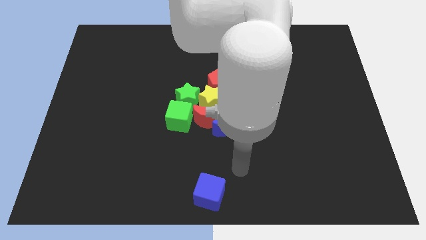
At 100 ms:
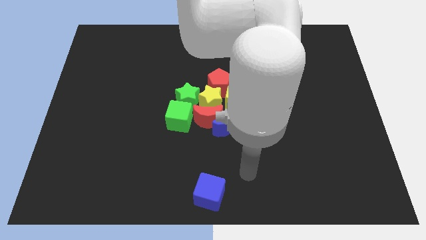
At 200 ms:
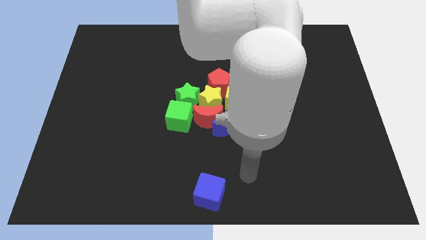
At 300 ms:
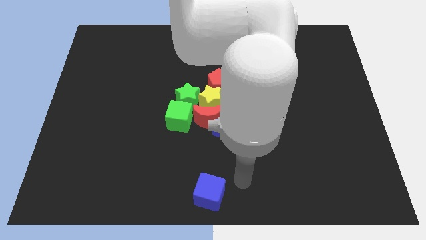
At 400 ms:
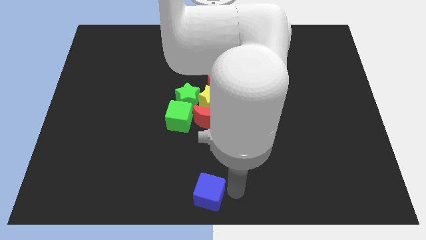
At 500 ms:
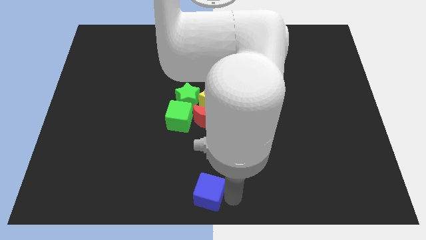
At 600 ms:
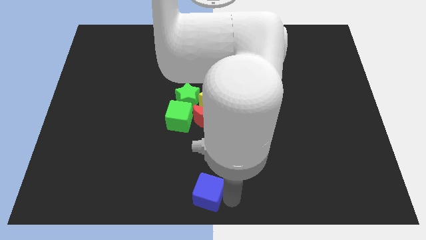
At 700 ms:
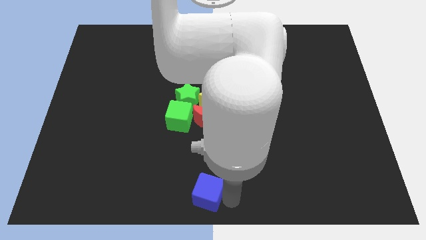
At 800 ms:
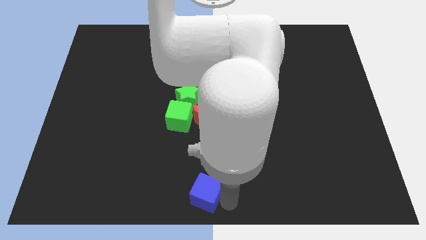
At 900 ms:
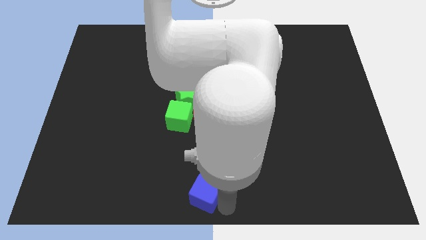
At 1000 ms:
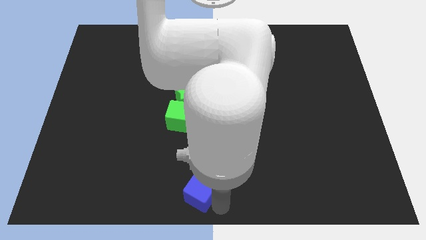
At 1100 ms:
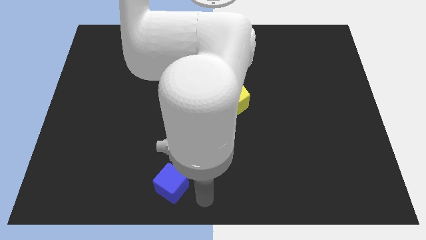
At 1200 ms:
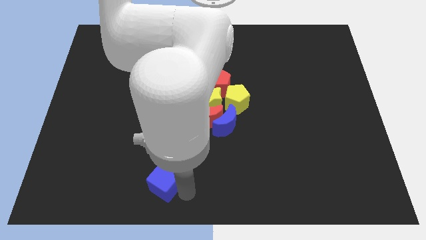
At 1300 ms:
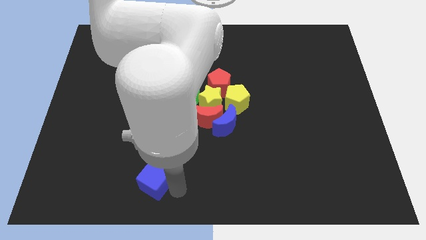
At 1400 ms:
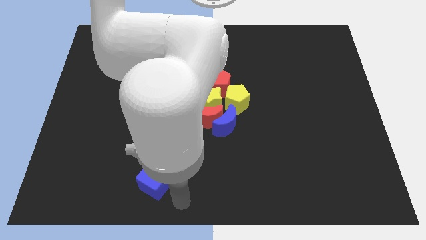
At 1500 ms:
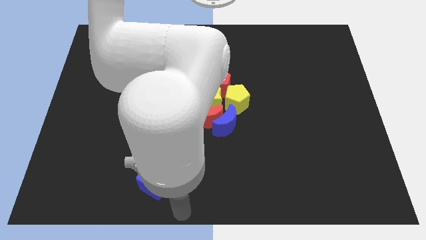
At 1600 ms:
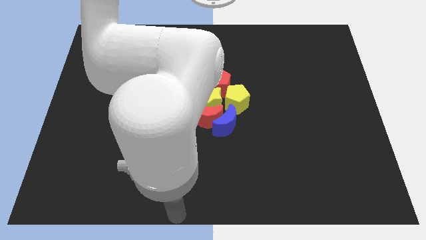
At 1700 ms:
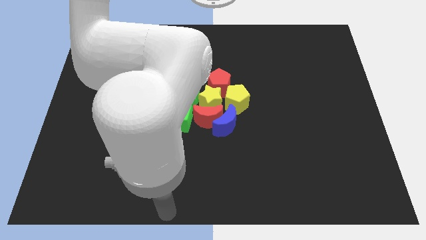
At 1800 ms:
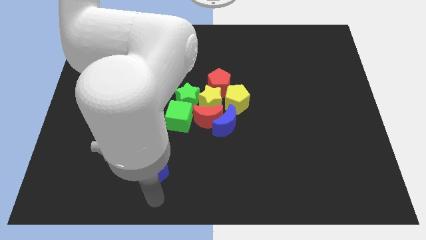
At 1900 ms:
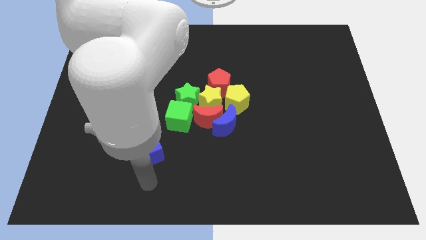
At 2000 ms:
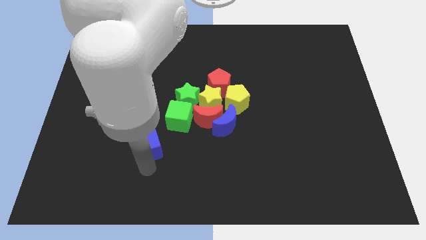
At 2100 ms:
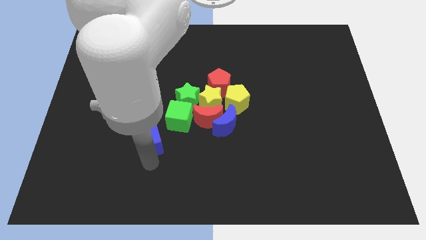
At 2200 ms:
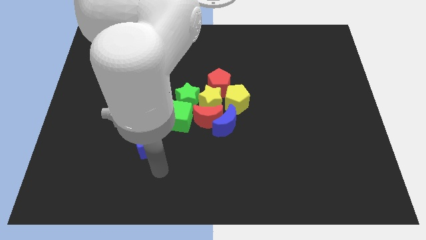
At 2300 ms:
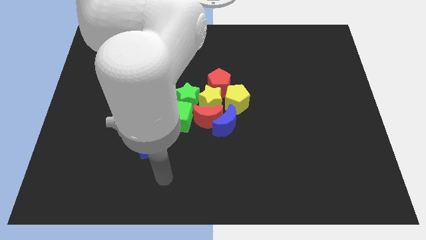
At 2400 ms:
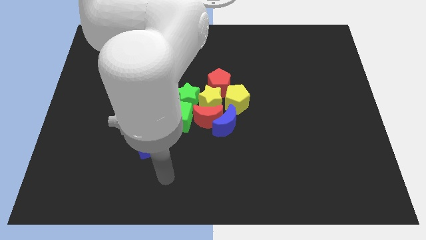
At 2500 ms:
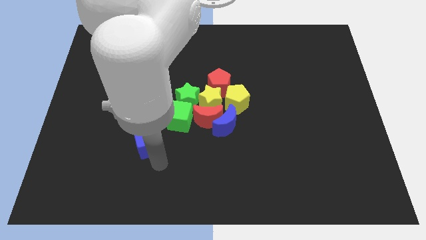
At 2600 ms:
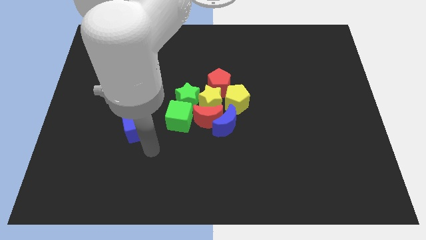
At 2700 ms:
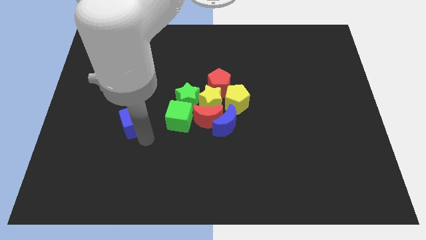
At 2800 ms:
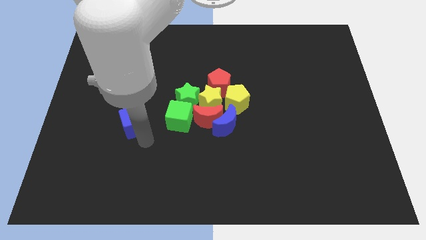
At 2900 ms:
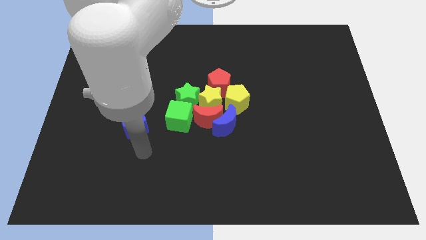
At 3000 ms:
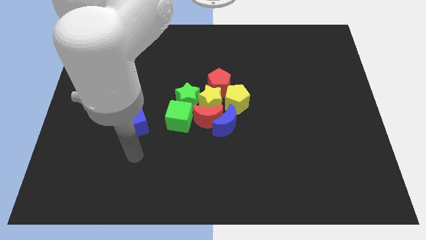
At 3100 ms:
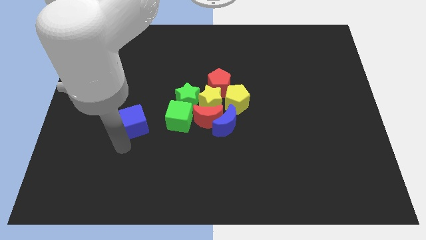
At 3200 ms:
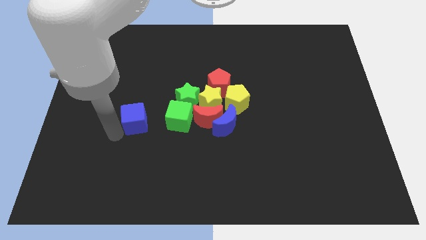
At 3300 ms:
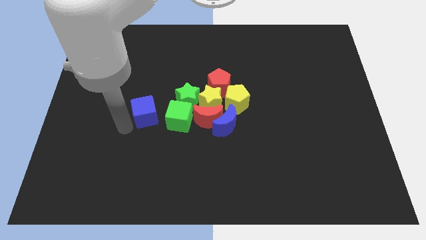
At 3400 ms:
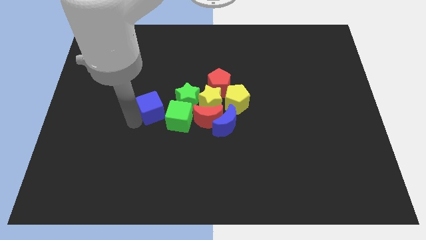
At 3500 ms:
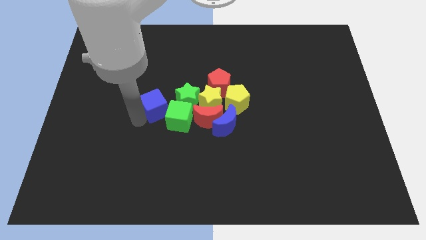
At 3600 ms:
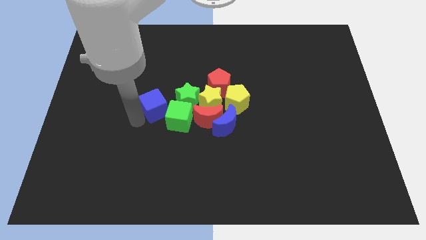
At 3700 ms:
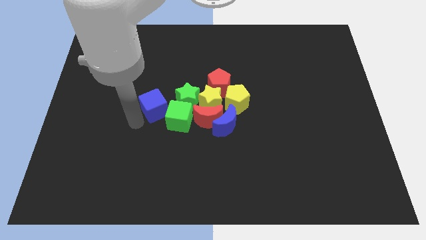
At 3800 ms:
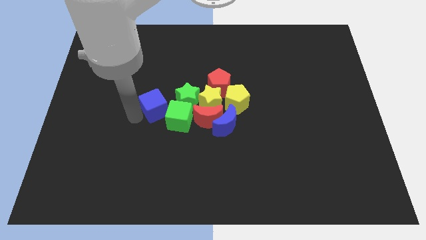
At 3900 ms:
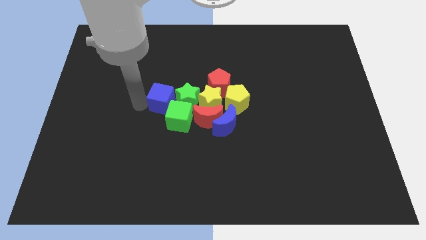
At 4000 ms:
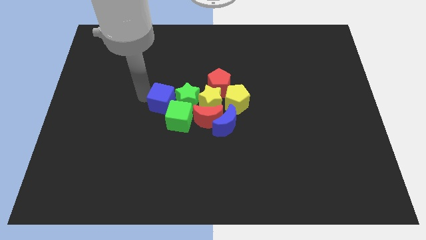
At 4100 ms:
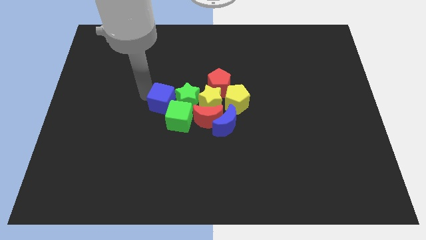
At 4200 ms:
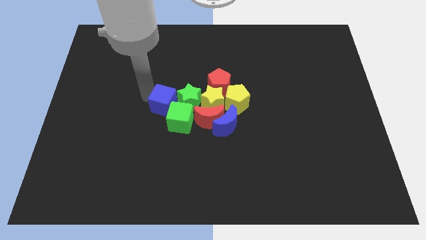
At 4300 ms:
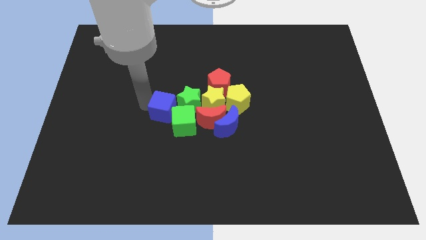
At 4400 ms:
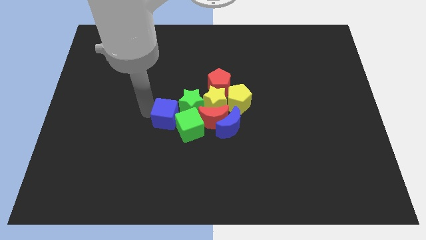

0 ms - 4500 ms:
push the blue cube into the green cube and green star

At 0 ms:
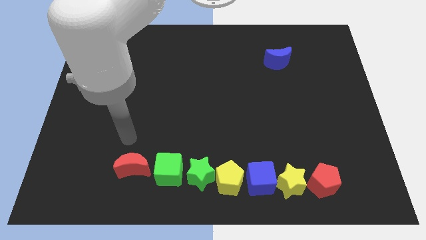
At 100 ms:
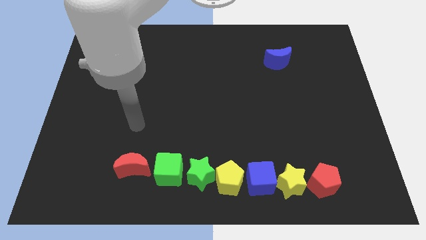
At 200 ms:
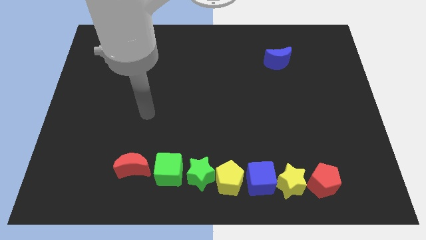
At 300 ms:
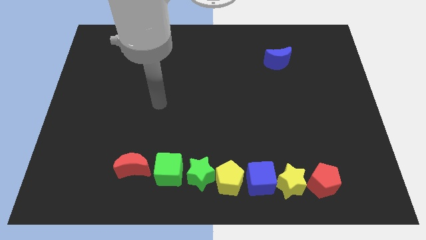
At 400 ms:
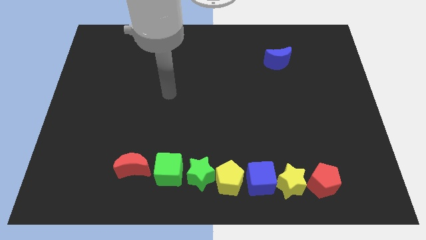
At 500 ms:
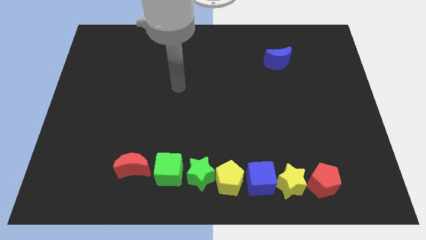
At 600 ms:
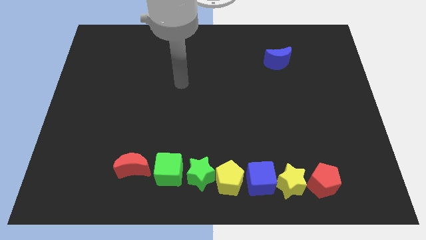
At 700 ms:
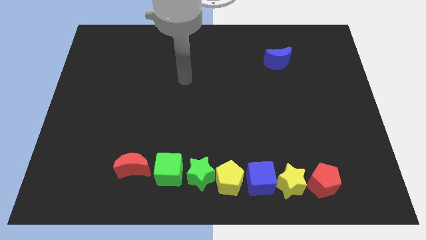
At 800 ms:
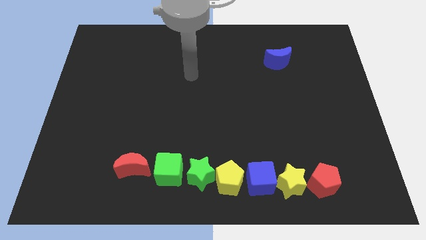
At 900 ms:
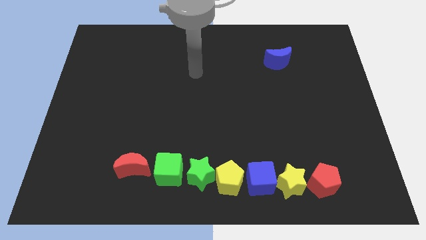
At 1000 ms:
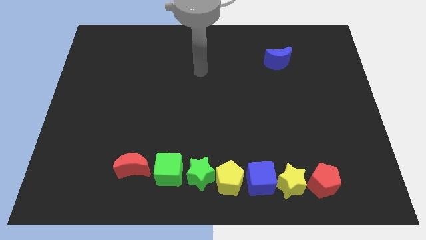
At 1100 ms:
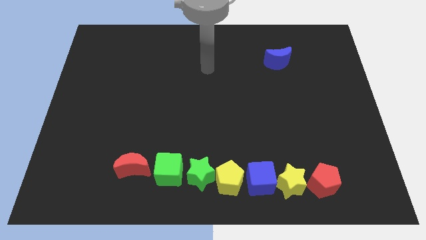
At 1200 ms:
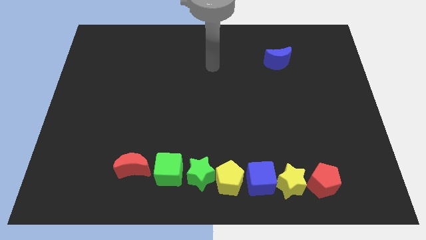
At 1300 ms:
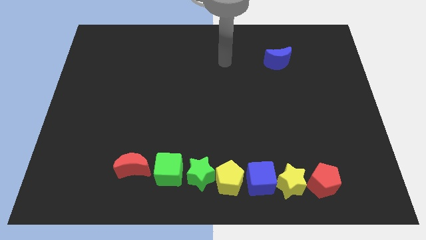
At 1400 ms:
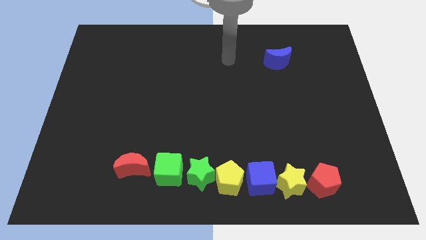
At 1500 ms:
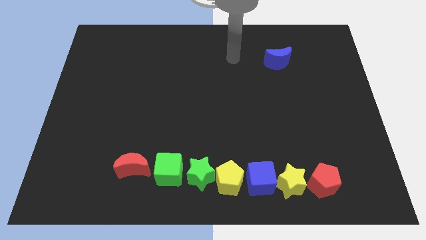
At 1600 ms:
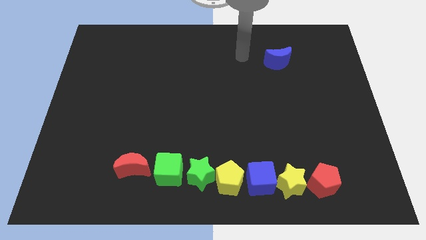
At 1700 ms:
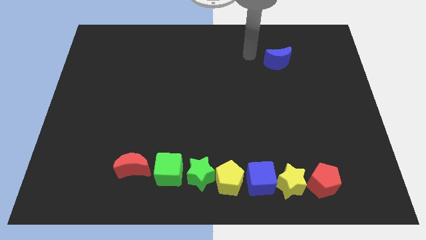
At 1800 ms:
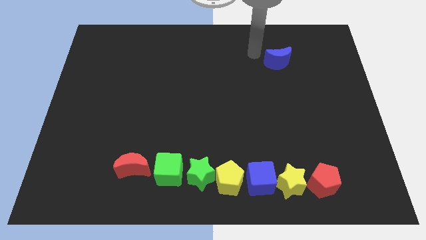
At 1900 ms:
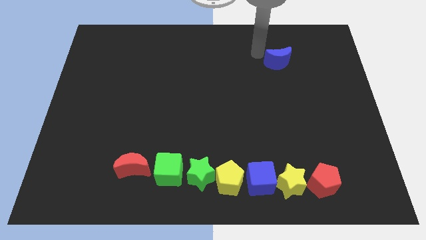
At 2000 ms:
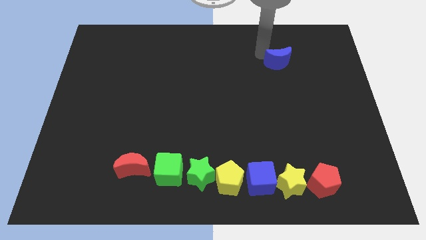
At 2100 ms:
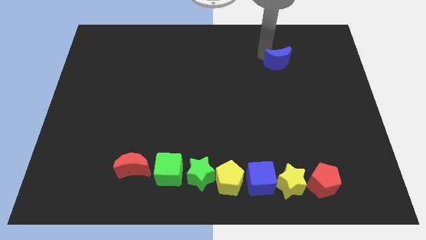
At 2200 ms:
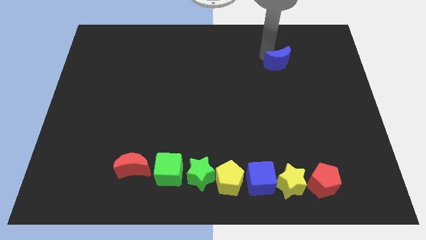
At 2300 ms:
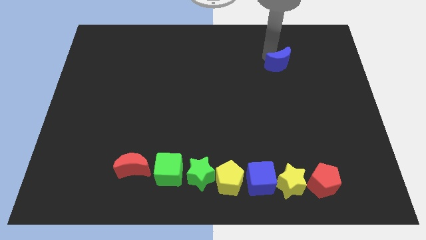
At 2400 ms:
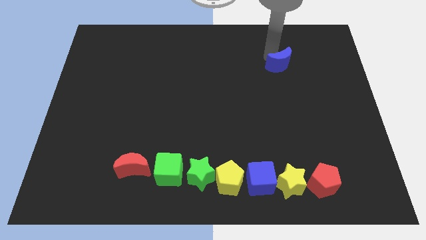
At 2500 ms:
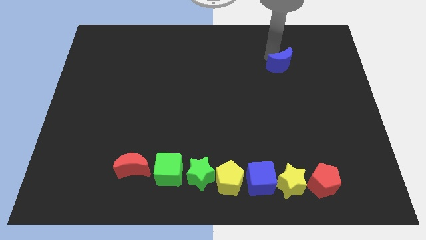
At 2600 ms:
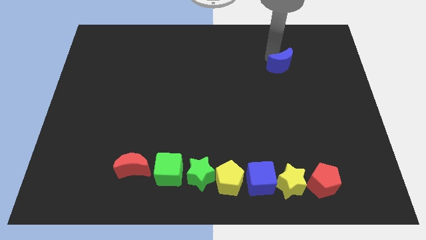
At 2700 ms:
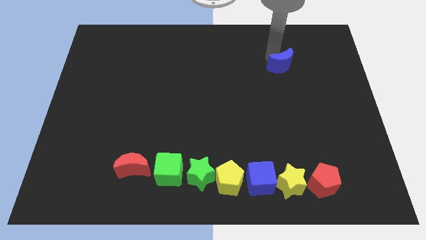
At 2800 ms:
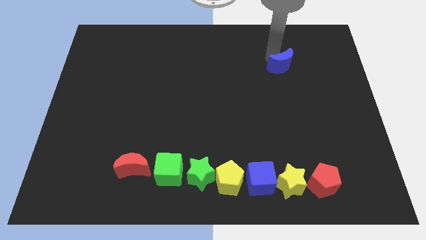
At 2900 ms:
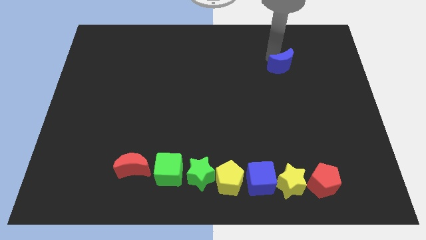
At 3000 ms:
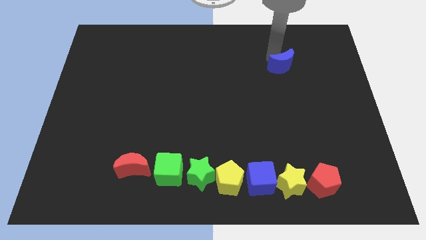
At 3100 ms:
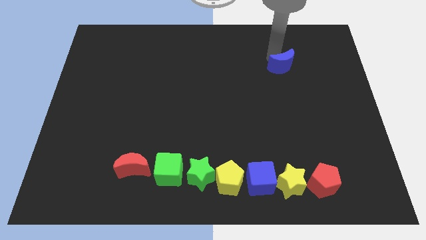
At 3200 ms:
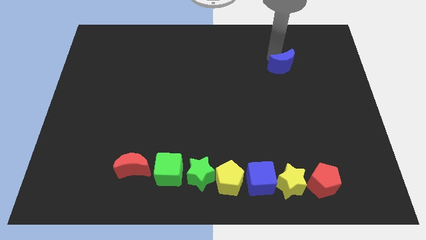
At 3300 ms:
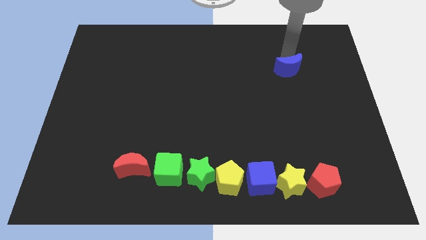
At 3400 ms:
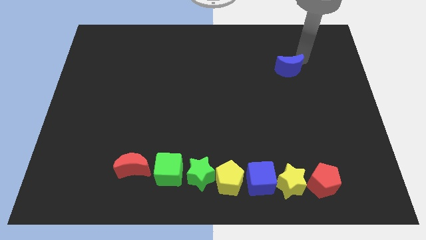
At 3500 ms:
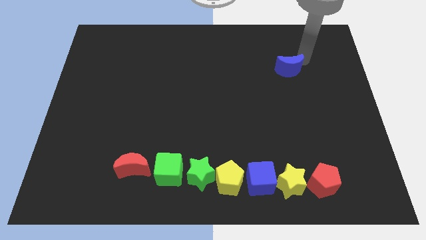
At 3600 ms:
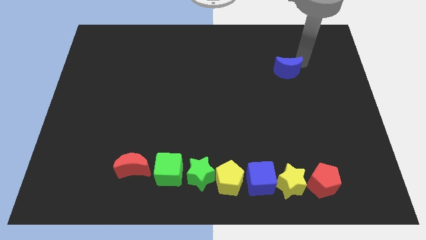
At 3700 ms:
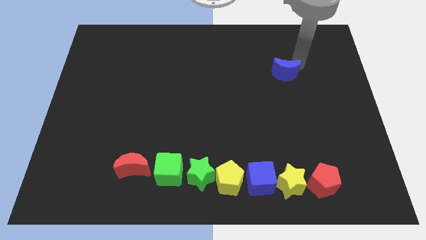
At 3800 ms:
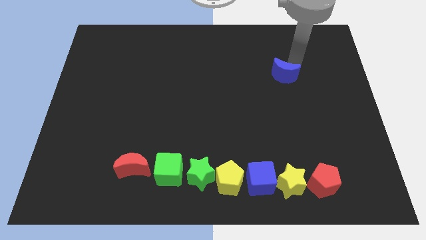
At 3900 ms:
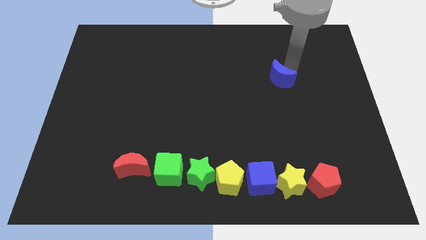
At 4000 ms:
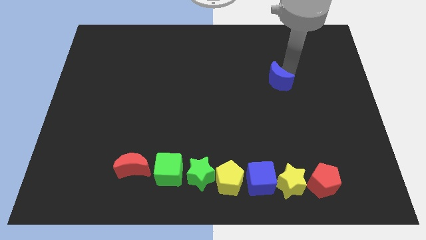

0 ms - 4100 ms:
push the blue crescent slightly down

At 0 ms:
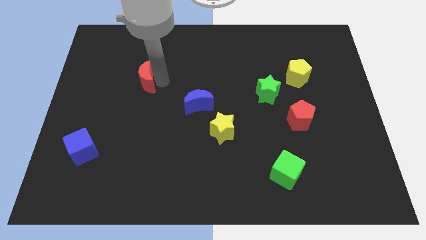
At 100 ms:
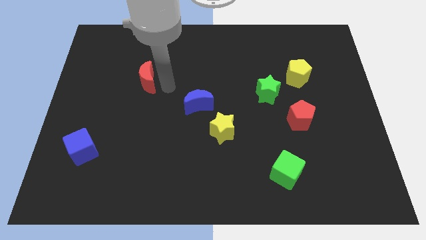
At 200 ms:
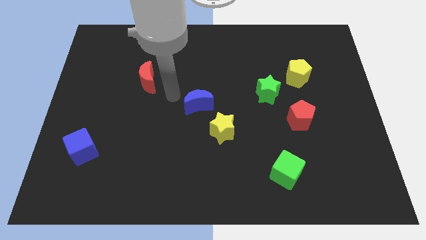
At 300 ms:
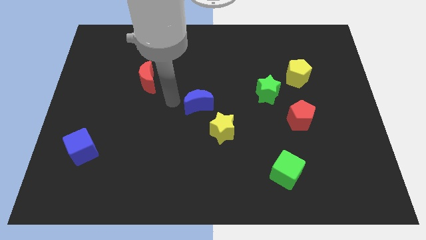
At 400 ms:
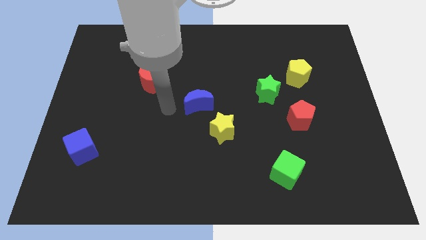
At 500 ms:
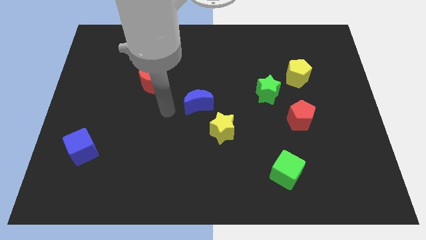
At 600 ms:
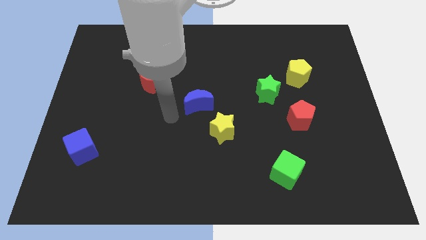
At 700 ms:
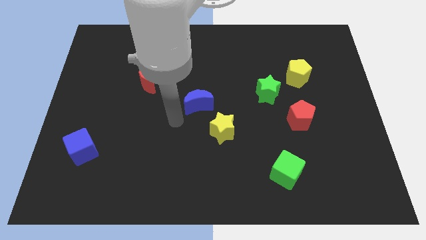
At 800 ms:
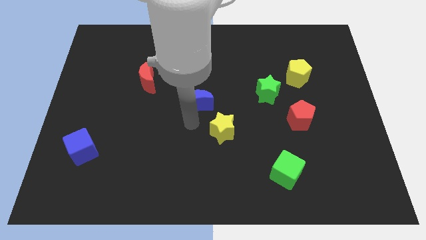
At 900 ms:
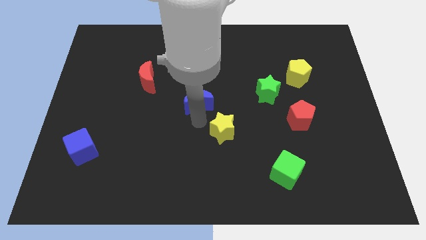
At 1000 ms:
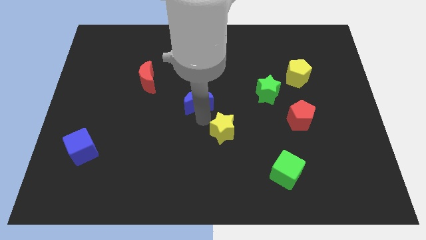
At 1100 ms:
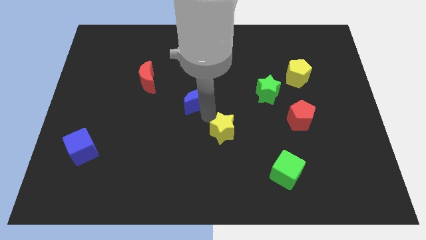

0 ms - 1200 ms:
point your arm at the bottom side of the blue crescent
